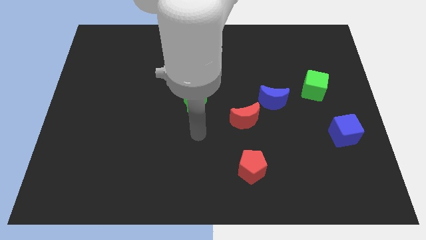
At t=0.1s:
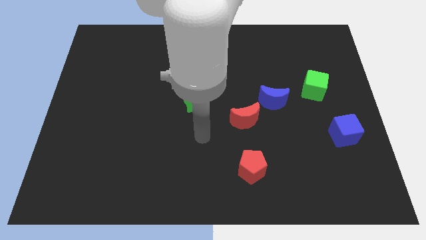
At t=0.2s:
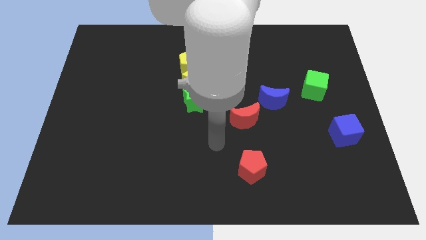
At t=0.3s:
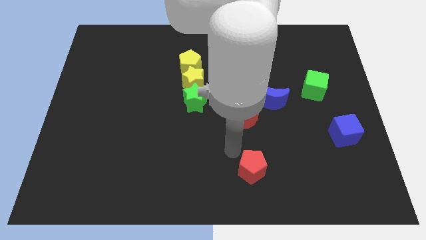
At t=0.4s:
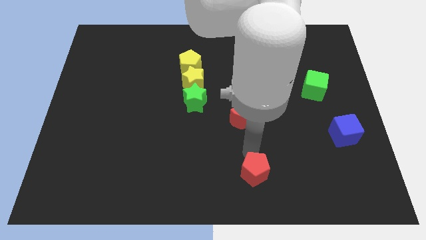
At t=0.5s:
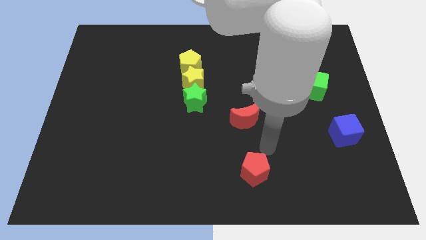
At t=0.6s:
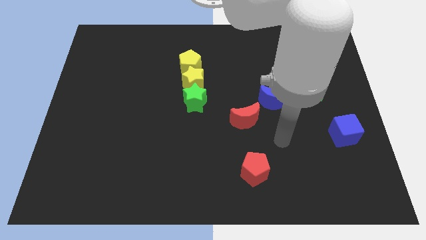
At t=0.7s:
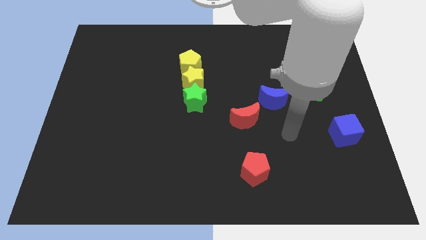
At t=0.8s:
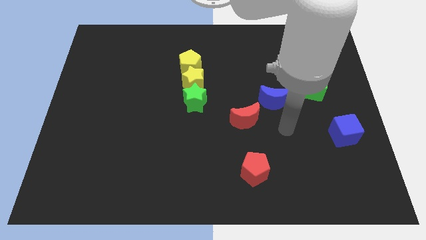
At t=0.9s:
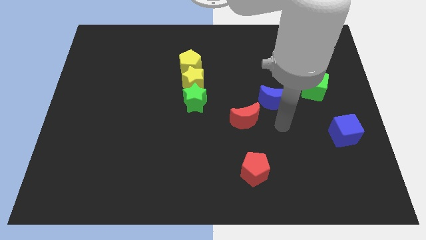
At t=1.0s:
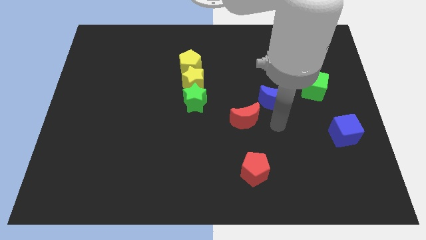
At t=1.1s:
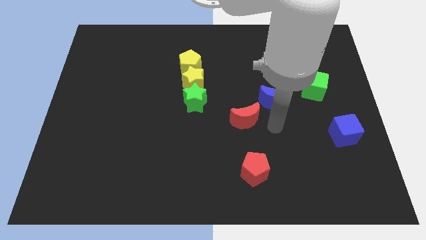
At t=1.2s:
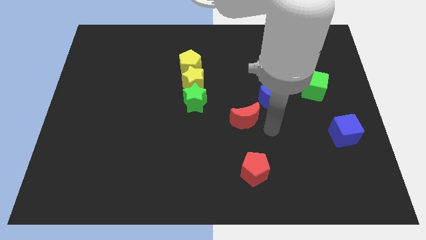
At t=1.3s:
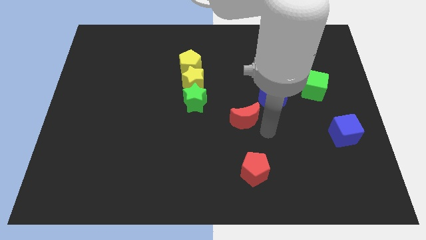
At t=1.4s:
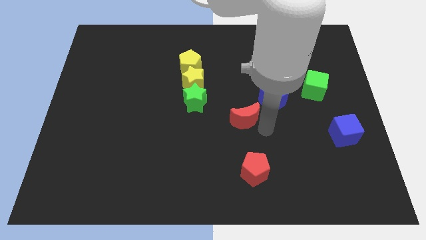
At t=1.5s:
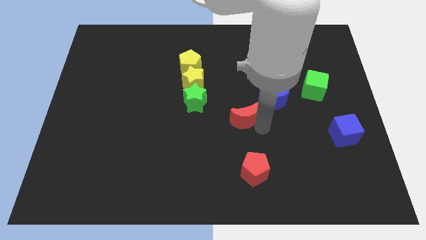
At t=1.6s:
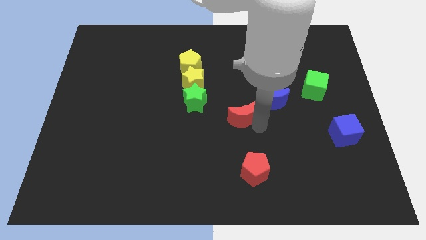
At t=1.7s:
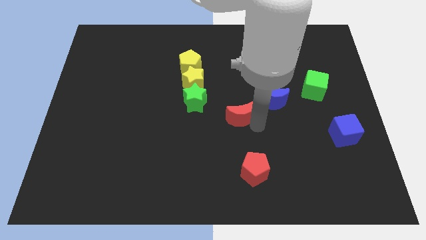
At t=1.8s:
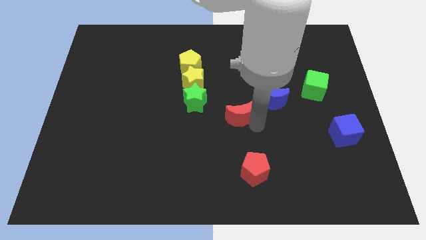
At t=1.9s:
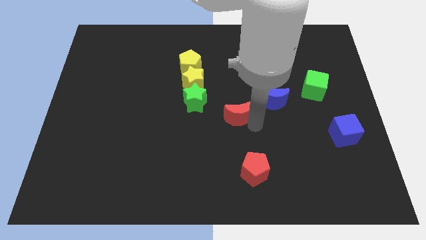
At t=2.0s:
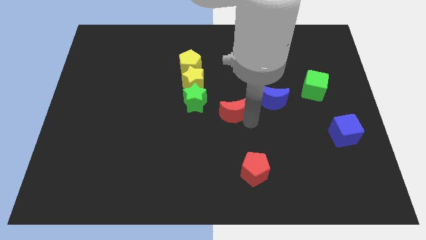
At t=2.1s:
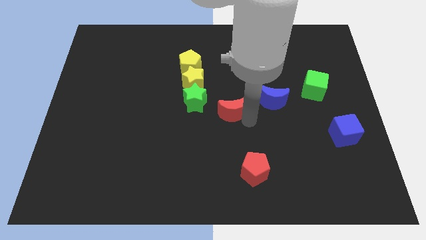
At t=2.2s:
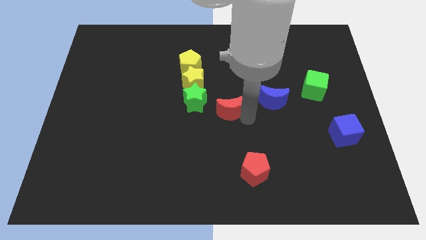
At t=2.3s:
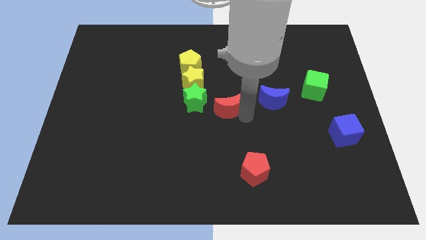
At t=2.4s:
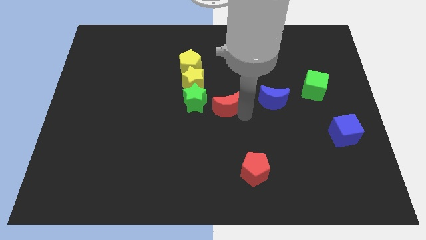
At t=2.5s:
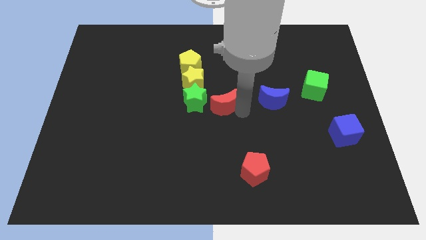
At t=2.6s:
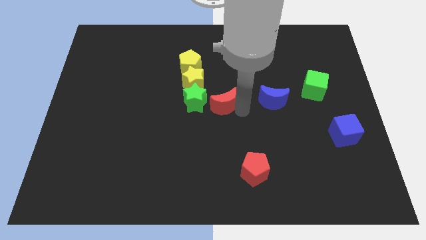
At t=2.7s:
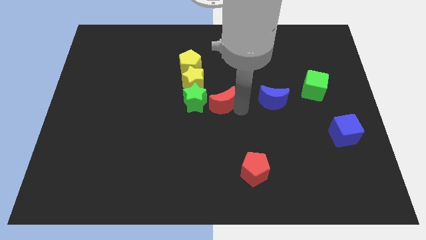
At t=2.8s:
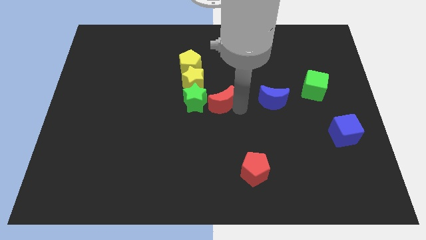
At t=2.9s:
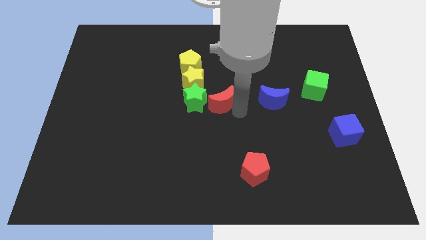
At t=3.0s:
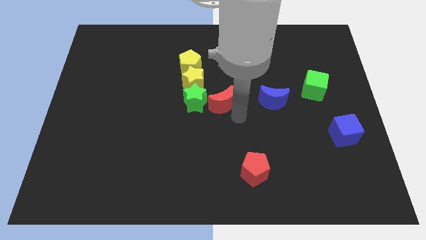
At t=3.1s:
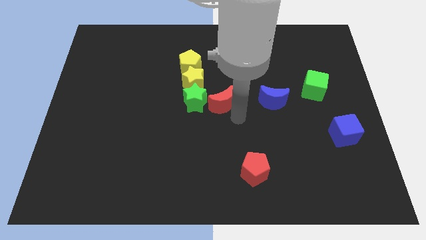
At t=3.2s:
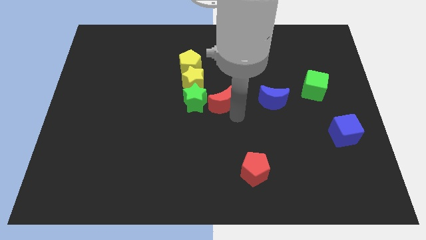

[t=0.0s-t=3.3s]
place the red moon in between the blue moon and green star

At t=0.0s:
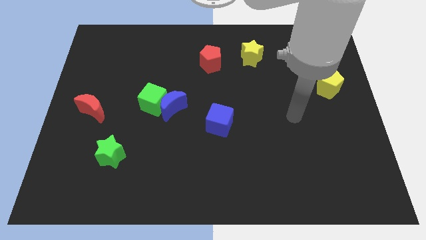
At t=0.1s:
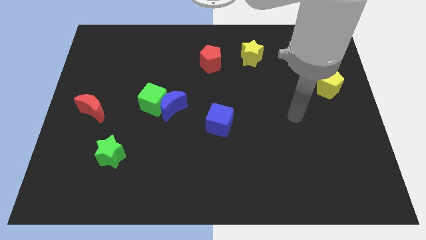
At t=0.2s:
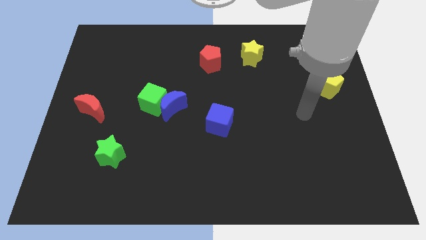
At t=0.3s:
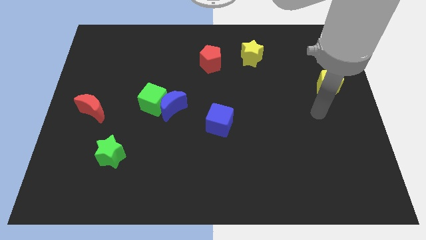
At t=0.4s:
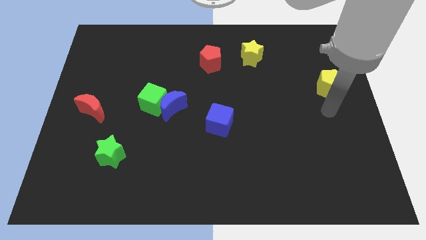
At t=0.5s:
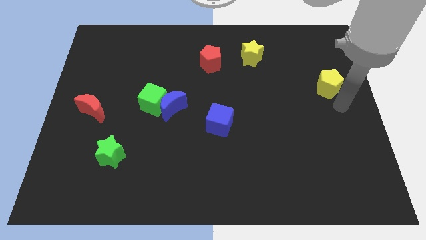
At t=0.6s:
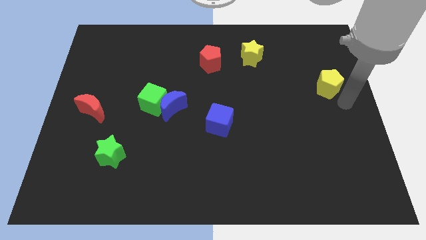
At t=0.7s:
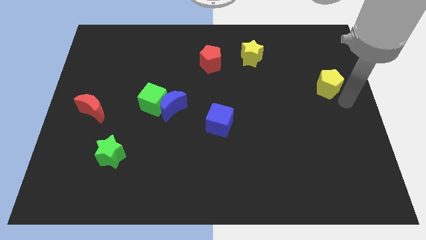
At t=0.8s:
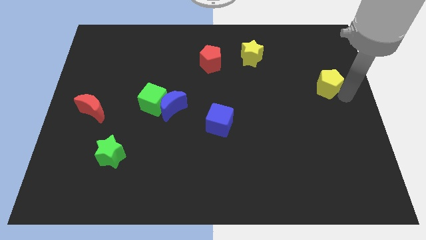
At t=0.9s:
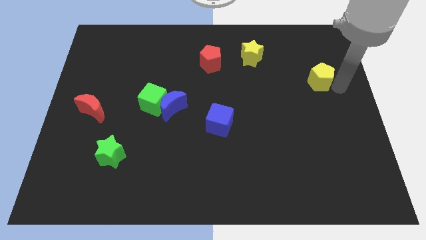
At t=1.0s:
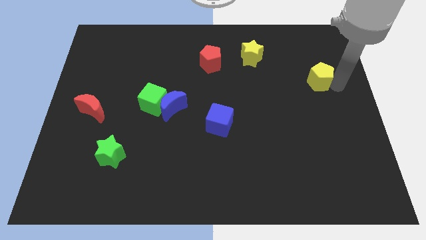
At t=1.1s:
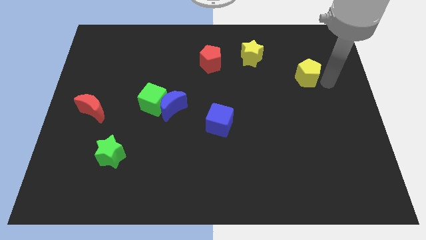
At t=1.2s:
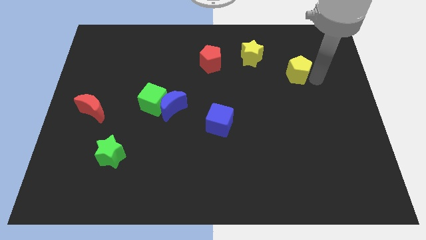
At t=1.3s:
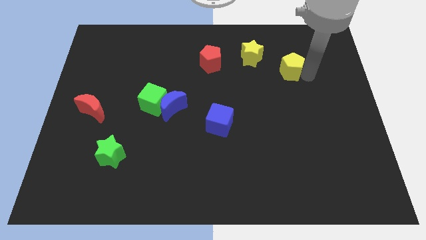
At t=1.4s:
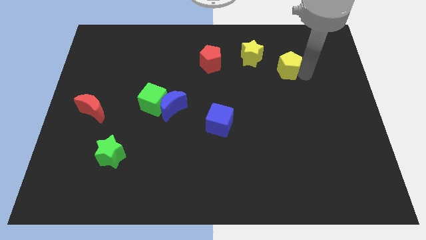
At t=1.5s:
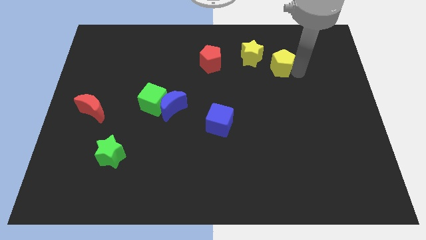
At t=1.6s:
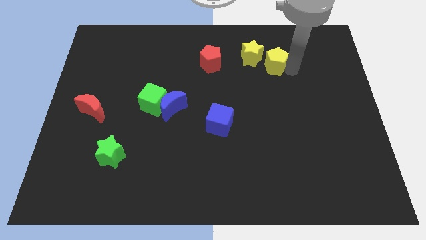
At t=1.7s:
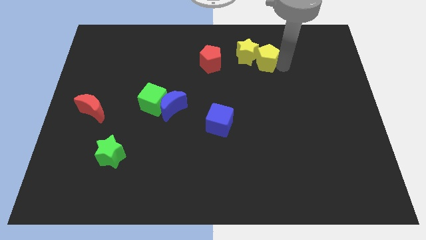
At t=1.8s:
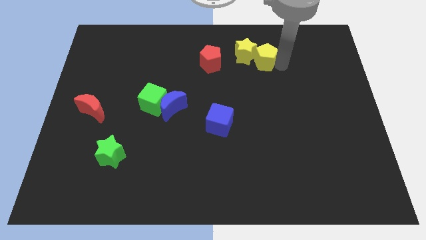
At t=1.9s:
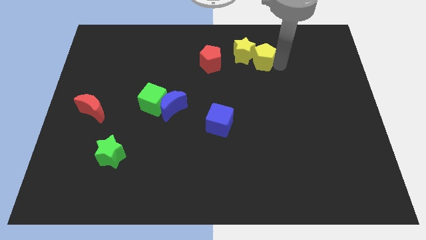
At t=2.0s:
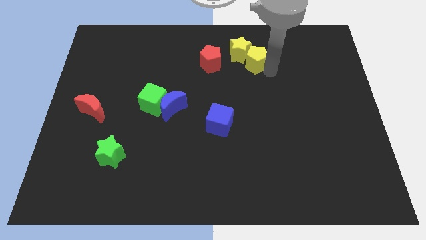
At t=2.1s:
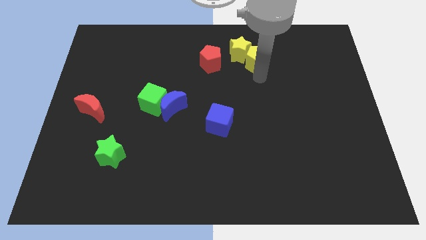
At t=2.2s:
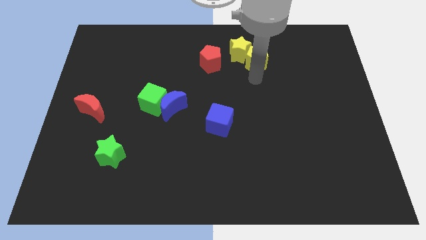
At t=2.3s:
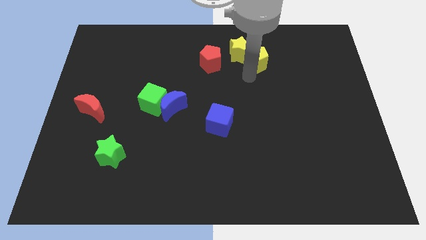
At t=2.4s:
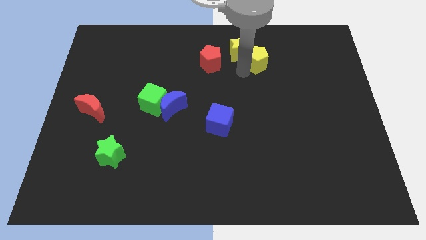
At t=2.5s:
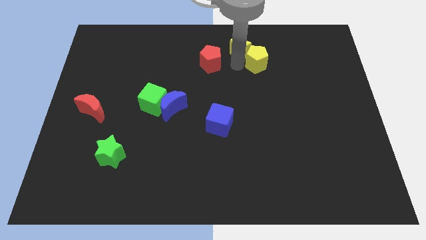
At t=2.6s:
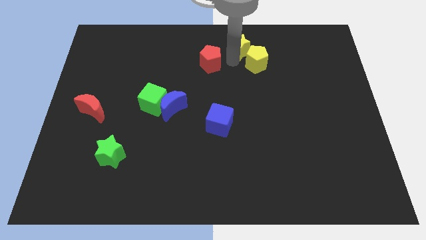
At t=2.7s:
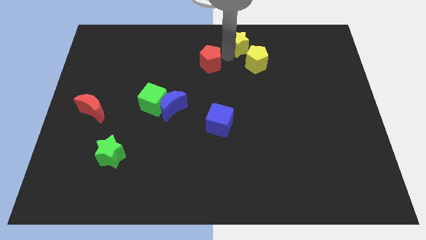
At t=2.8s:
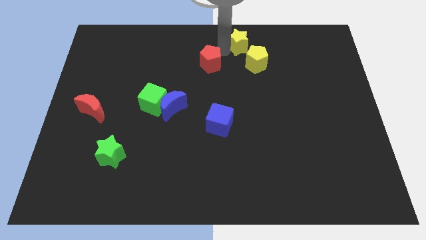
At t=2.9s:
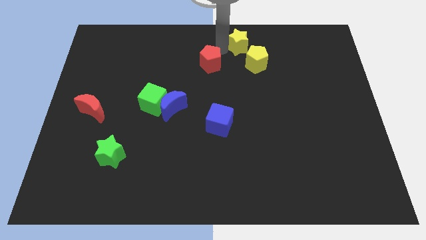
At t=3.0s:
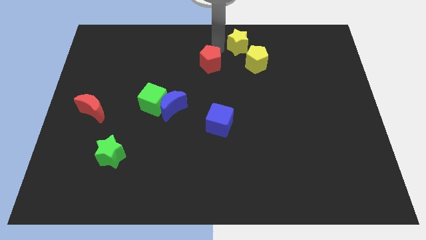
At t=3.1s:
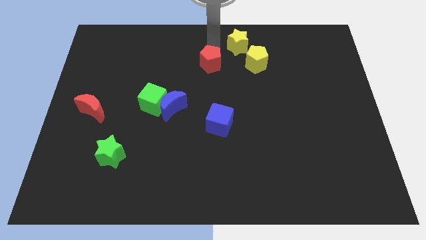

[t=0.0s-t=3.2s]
put the yellow pentagon into the yellow star

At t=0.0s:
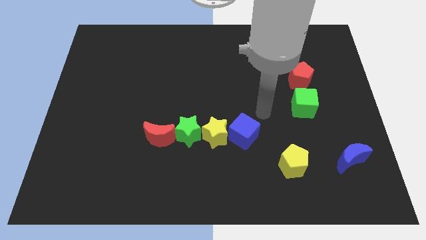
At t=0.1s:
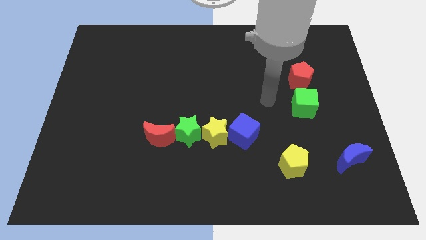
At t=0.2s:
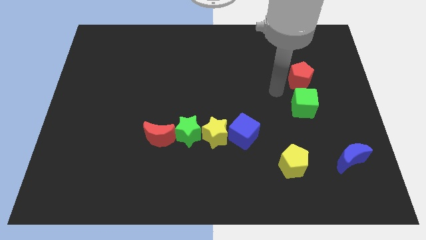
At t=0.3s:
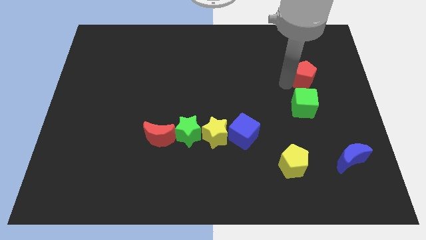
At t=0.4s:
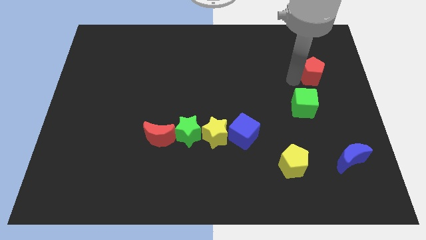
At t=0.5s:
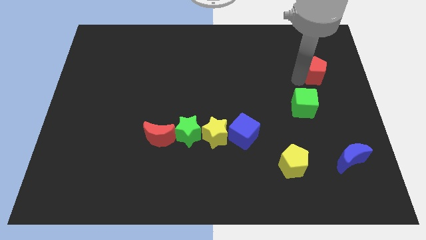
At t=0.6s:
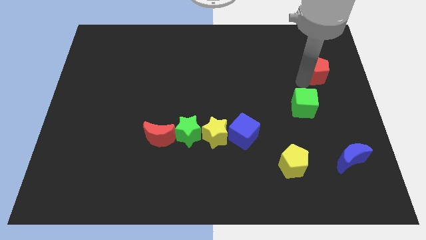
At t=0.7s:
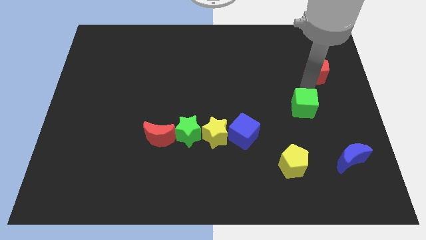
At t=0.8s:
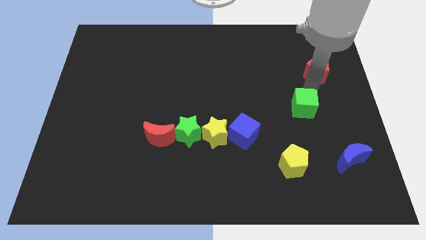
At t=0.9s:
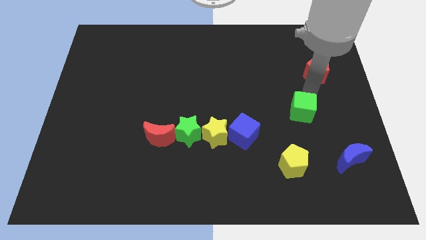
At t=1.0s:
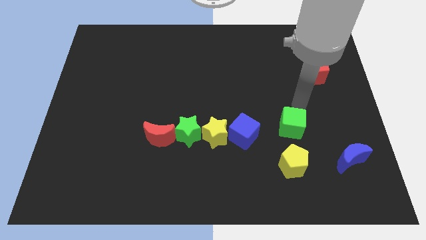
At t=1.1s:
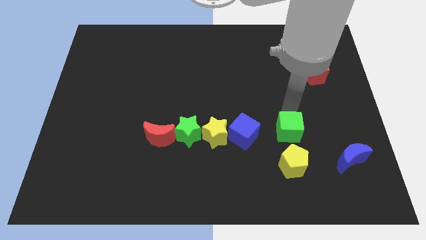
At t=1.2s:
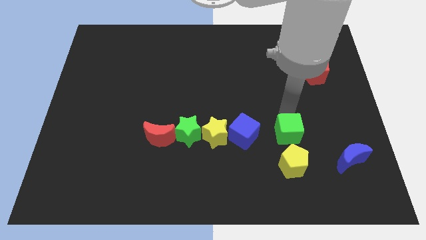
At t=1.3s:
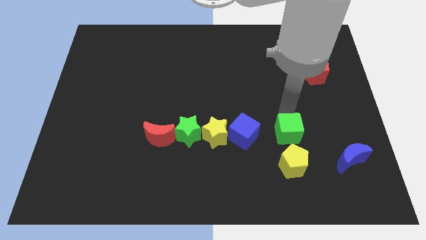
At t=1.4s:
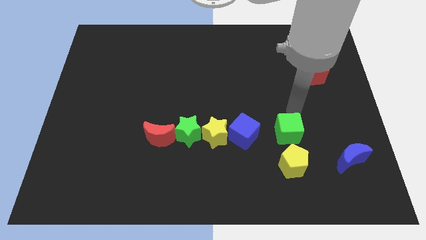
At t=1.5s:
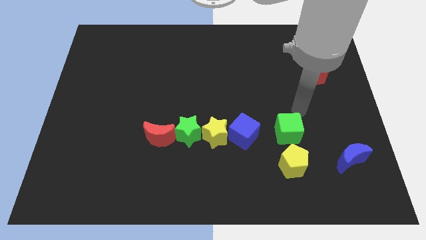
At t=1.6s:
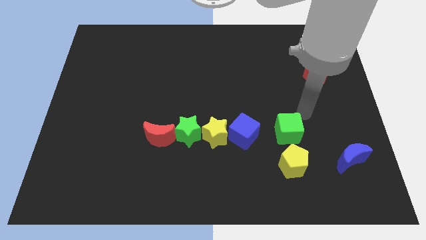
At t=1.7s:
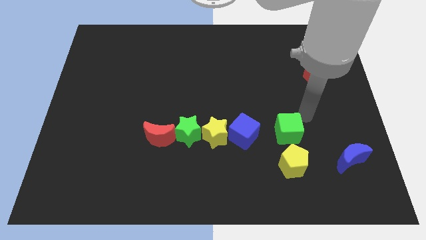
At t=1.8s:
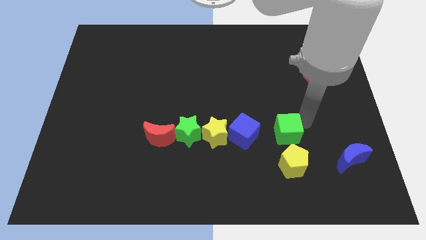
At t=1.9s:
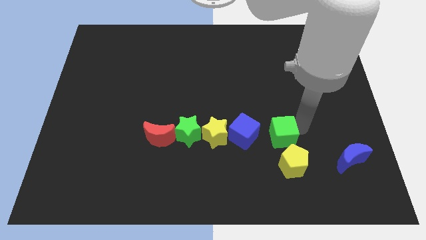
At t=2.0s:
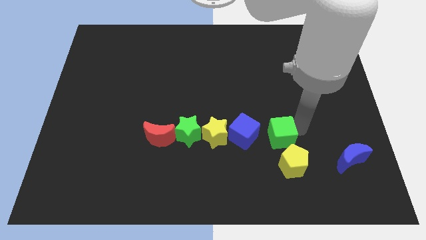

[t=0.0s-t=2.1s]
move the green cube above to the yellow pentagon

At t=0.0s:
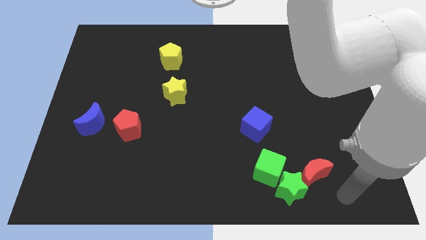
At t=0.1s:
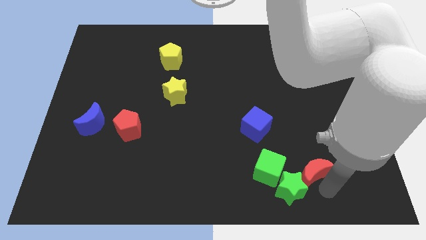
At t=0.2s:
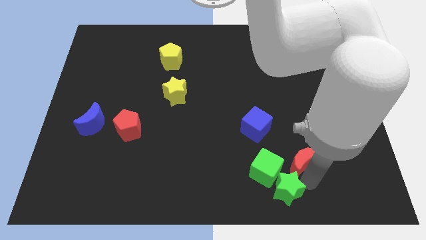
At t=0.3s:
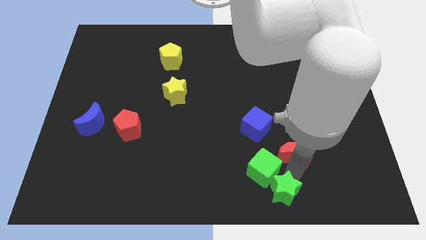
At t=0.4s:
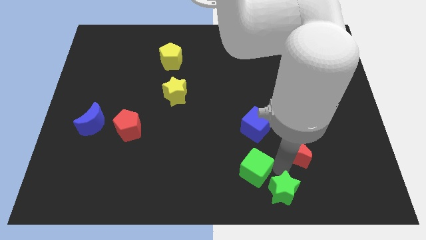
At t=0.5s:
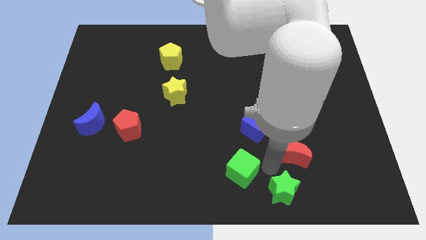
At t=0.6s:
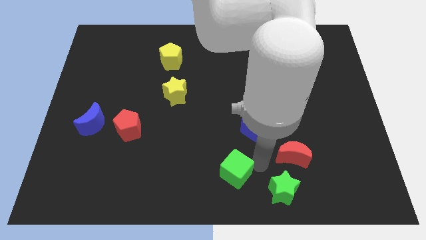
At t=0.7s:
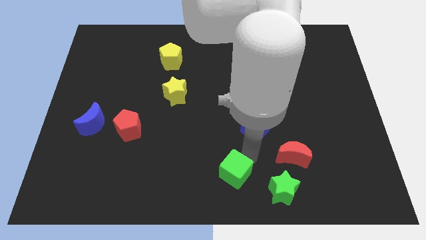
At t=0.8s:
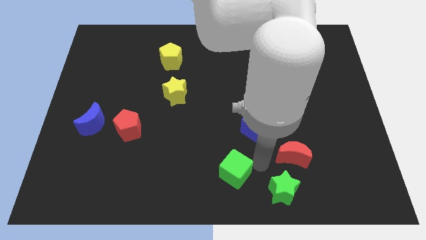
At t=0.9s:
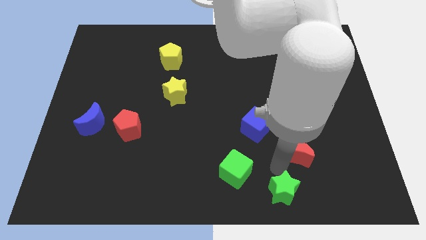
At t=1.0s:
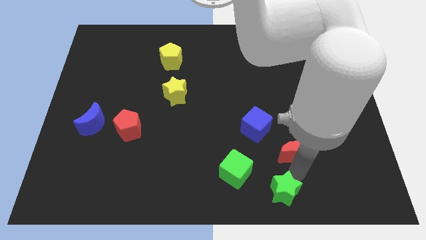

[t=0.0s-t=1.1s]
separate the green cube and red crescent diagonally to the green star
